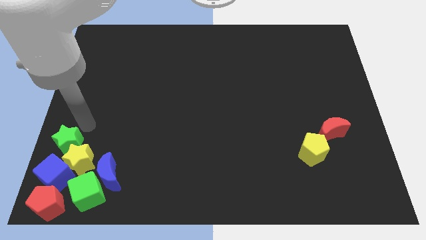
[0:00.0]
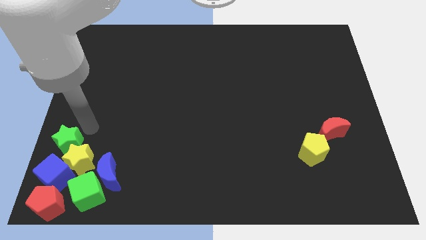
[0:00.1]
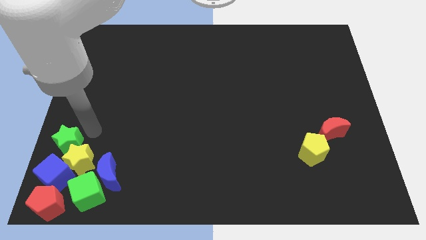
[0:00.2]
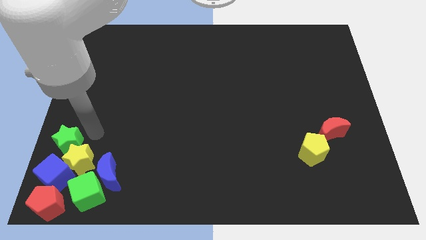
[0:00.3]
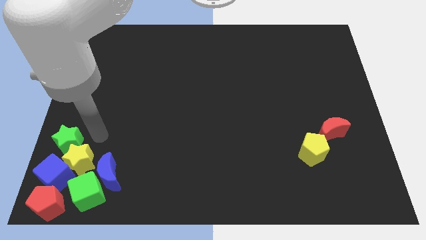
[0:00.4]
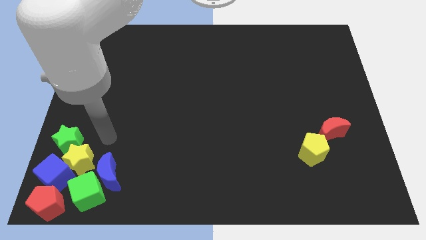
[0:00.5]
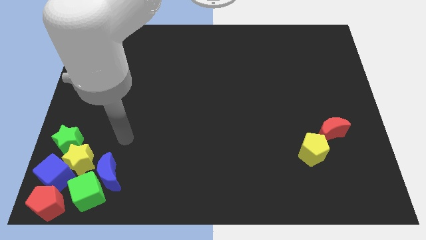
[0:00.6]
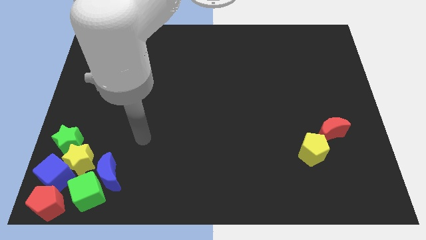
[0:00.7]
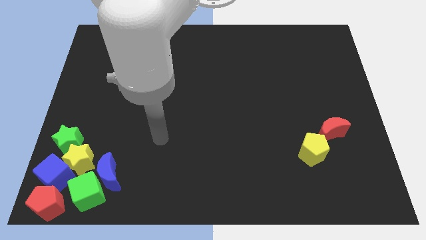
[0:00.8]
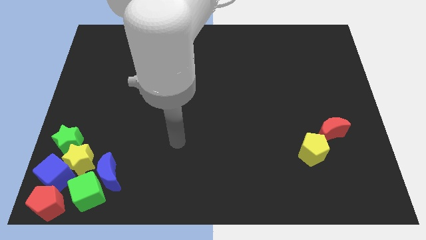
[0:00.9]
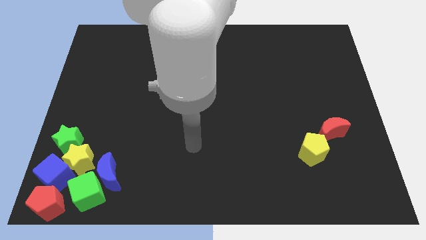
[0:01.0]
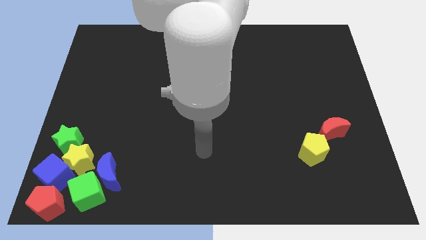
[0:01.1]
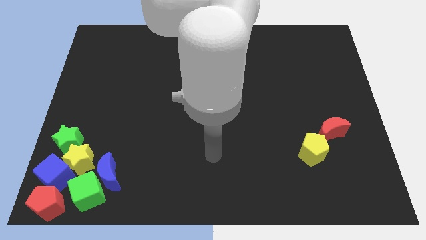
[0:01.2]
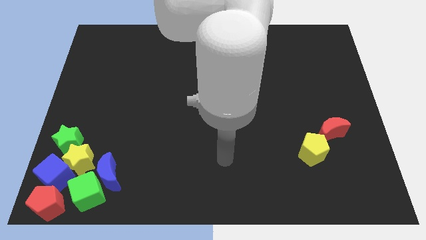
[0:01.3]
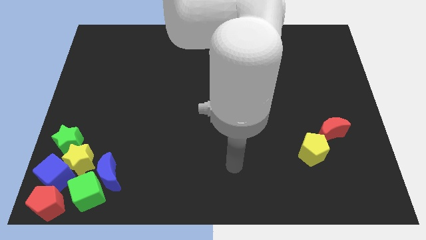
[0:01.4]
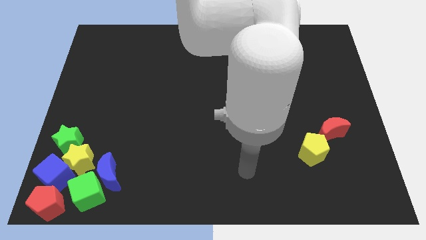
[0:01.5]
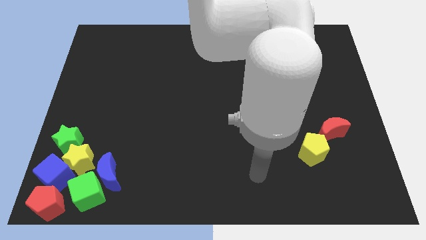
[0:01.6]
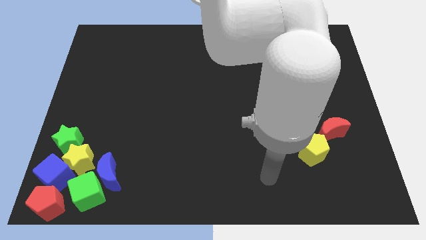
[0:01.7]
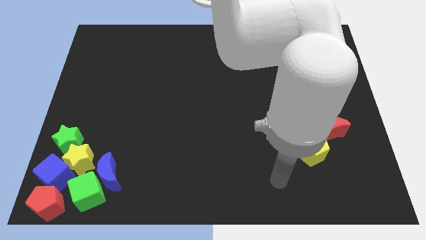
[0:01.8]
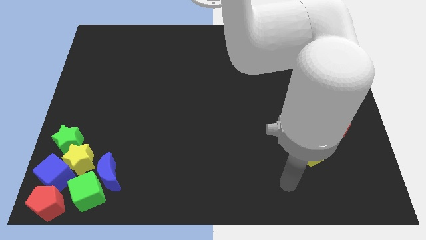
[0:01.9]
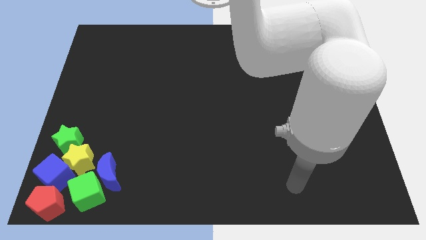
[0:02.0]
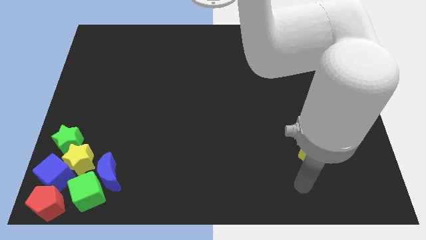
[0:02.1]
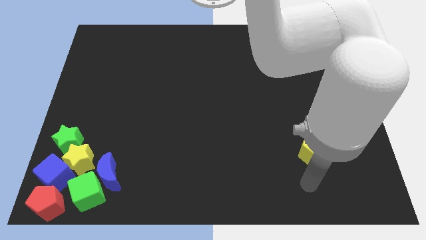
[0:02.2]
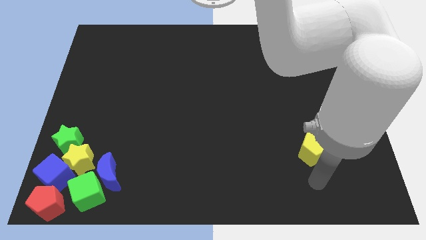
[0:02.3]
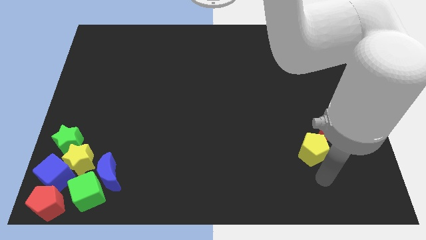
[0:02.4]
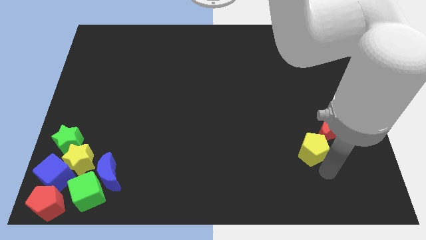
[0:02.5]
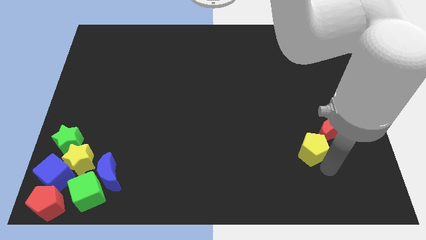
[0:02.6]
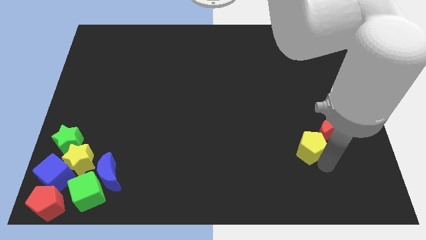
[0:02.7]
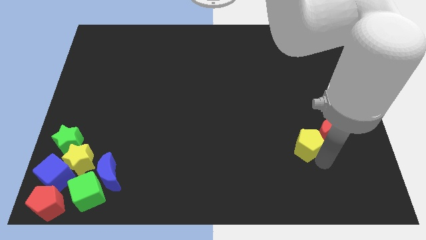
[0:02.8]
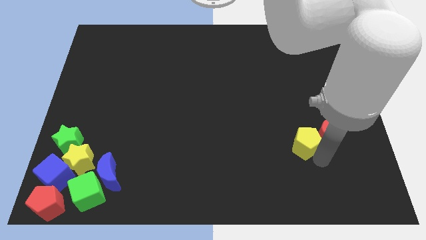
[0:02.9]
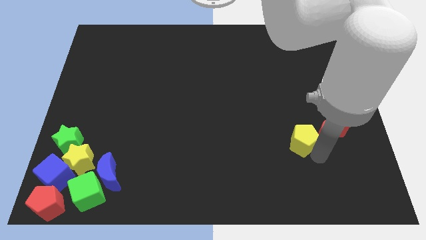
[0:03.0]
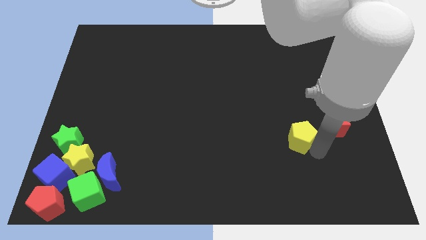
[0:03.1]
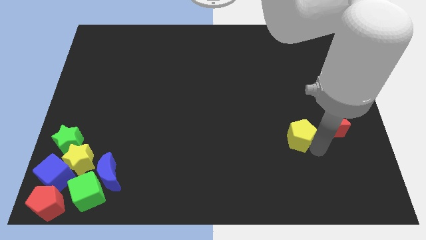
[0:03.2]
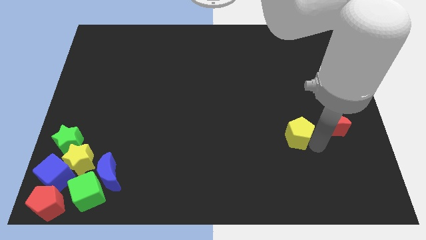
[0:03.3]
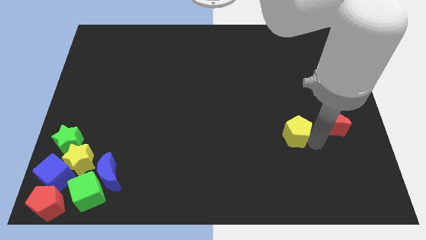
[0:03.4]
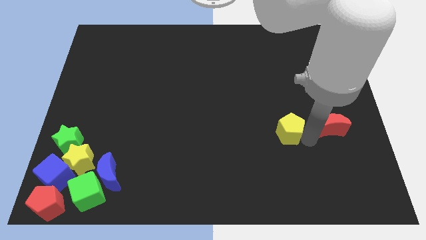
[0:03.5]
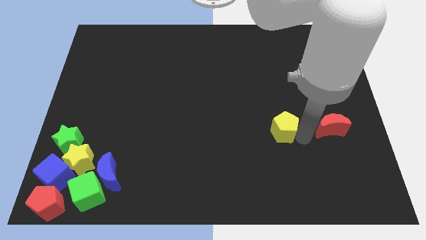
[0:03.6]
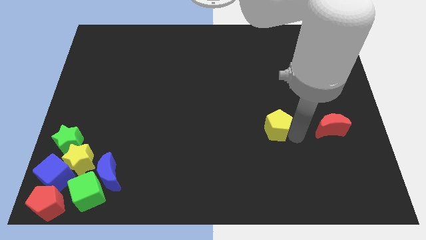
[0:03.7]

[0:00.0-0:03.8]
separate the yellow pentagon from the red crescent

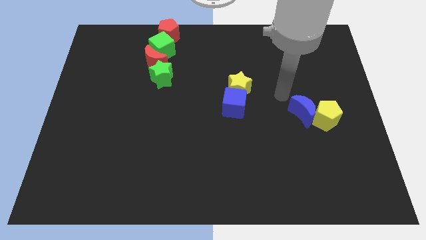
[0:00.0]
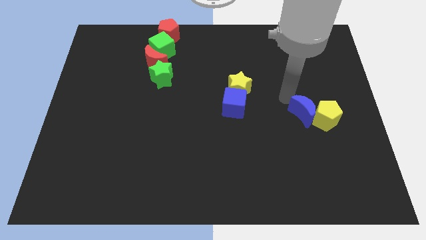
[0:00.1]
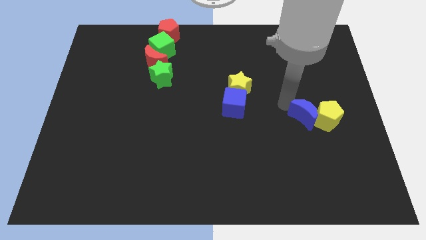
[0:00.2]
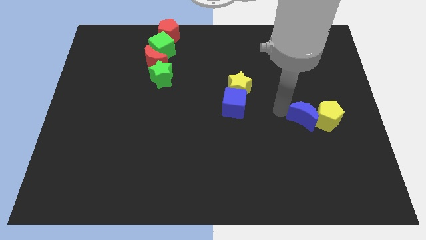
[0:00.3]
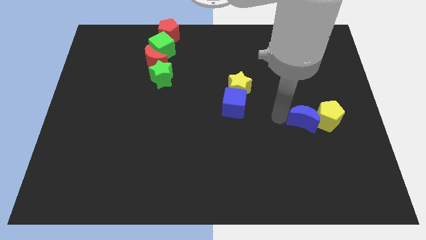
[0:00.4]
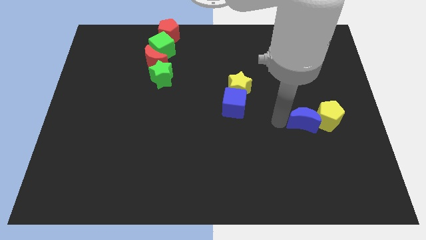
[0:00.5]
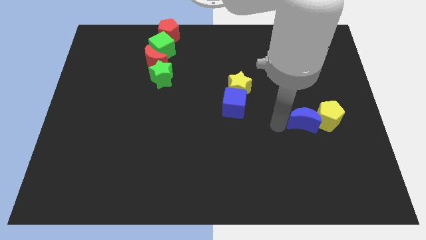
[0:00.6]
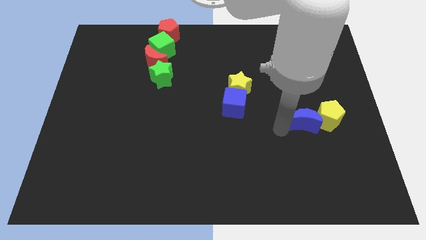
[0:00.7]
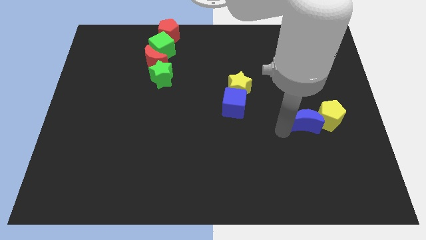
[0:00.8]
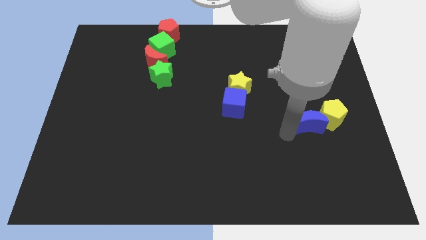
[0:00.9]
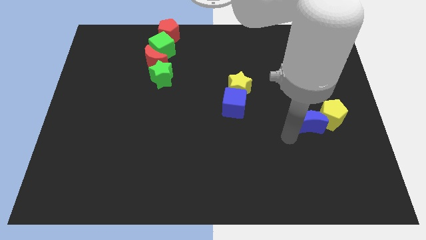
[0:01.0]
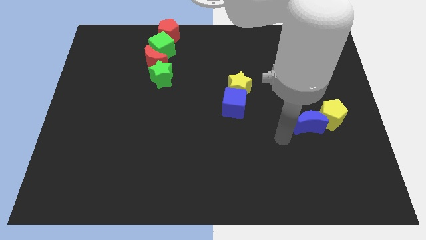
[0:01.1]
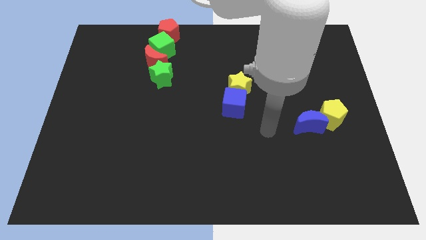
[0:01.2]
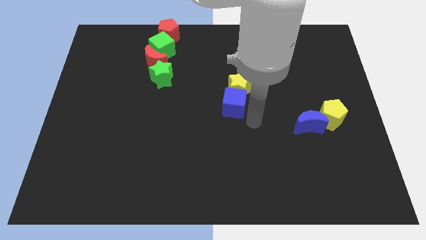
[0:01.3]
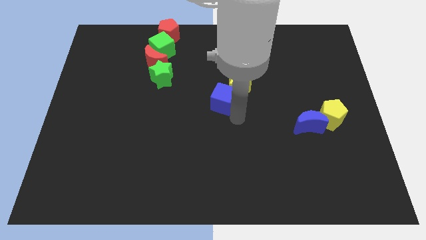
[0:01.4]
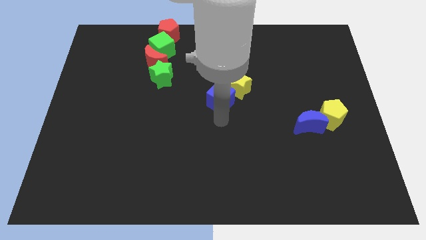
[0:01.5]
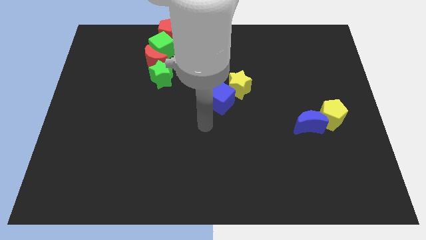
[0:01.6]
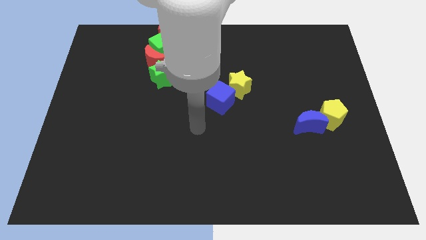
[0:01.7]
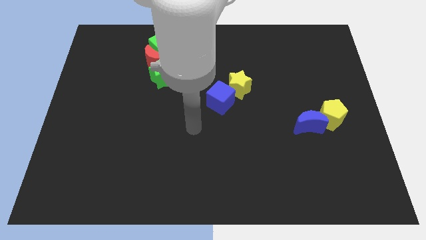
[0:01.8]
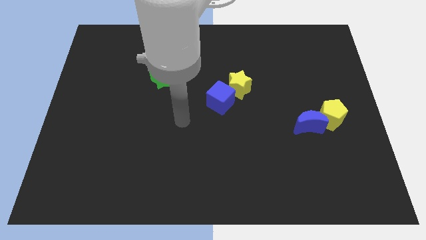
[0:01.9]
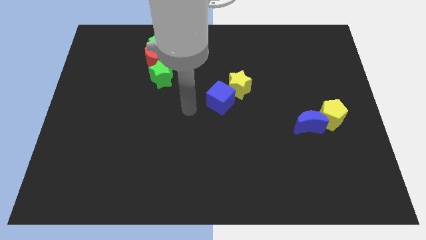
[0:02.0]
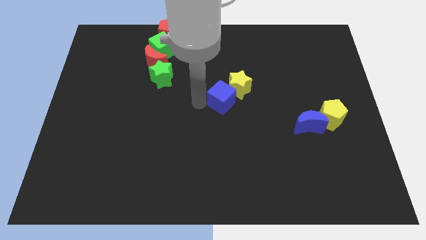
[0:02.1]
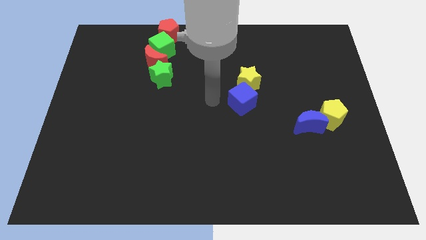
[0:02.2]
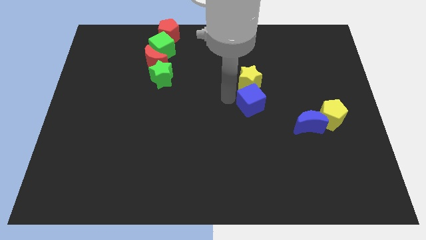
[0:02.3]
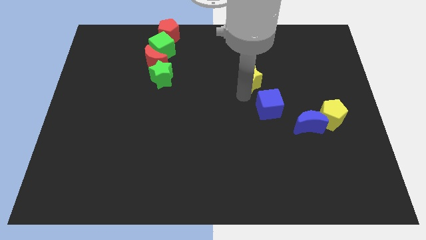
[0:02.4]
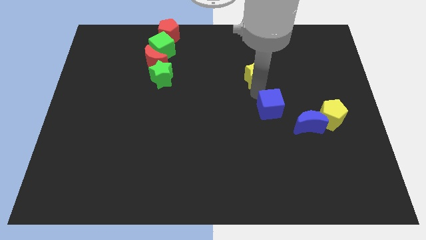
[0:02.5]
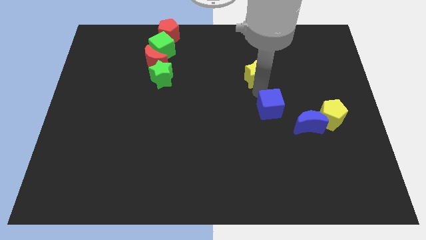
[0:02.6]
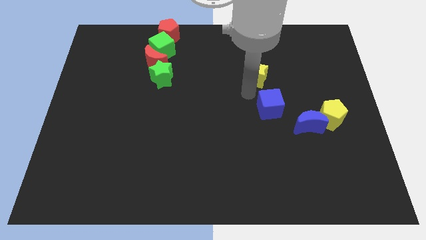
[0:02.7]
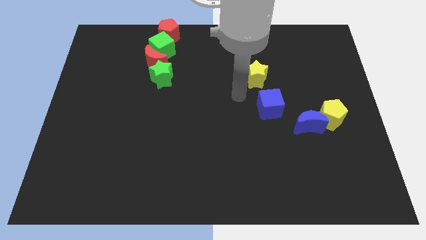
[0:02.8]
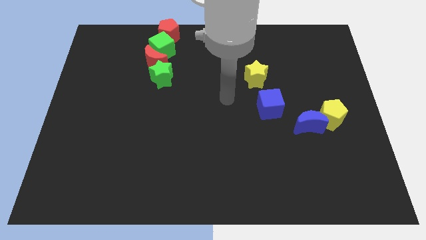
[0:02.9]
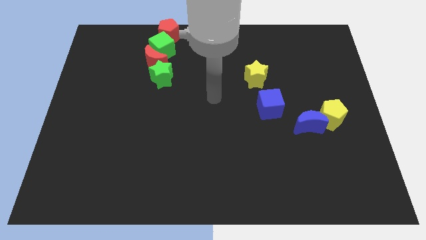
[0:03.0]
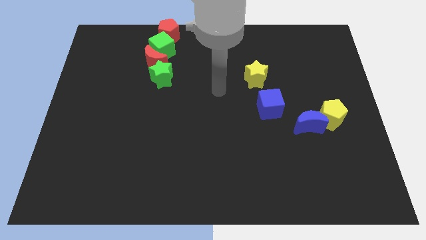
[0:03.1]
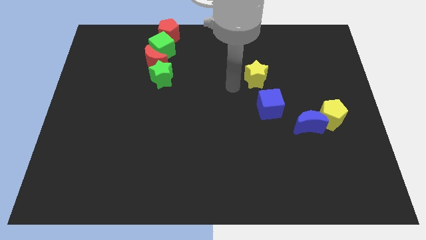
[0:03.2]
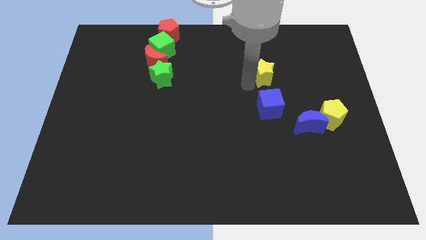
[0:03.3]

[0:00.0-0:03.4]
separate blue cube and yellow star

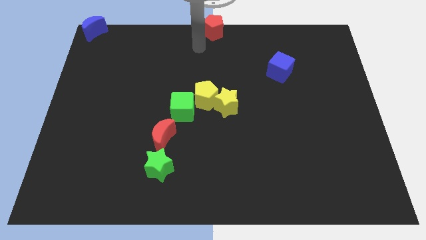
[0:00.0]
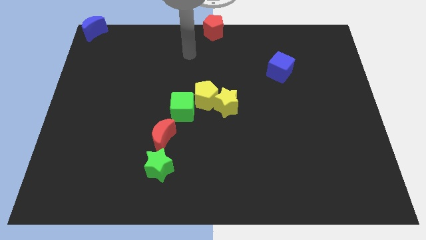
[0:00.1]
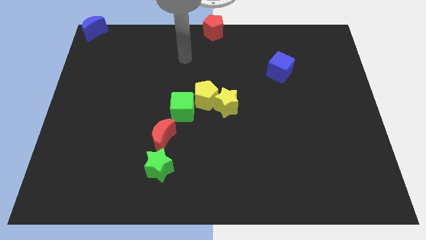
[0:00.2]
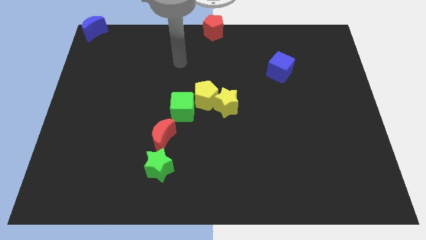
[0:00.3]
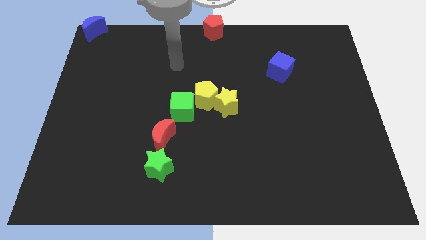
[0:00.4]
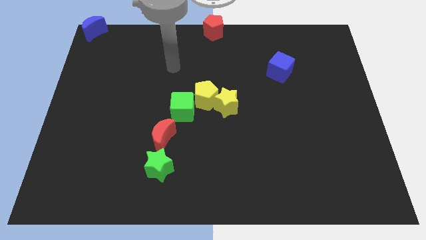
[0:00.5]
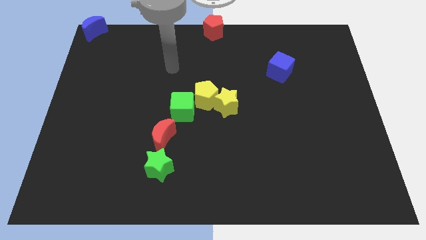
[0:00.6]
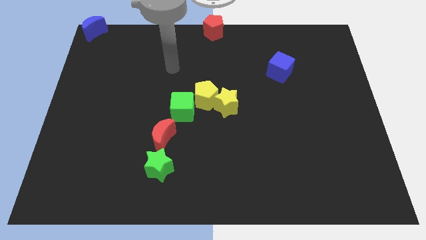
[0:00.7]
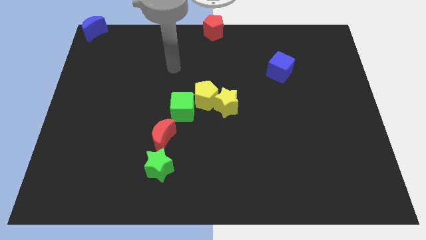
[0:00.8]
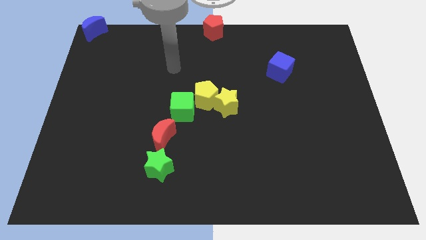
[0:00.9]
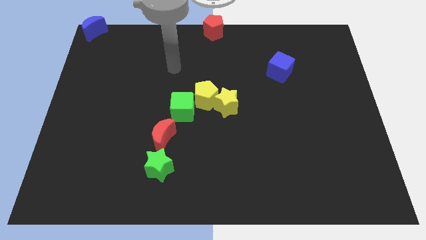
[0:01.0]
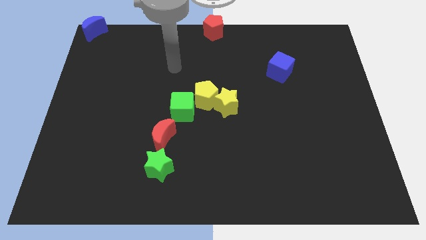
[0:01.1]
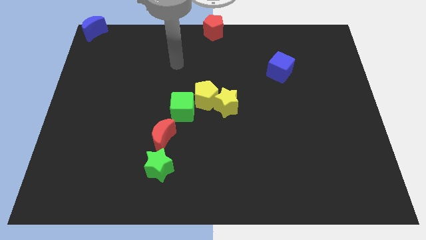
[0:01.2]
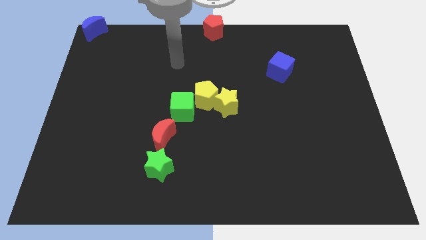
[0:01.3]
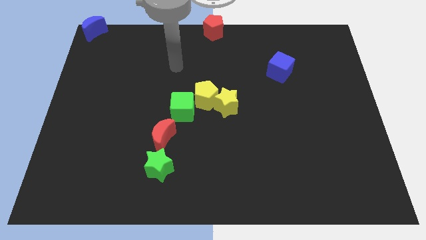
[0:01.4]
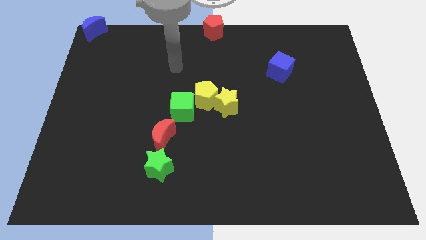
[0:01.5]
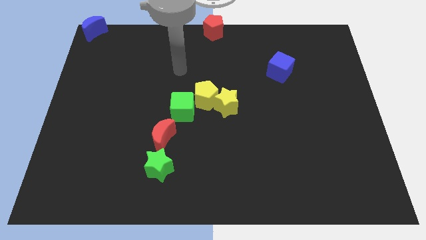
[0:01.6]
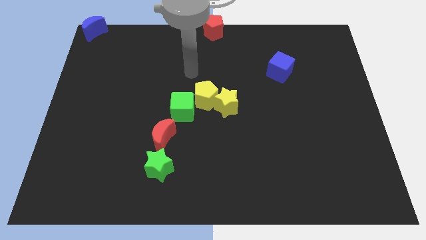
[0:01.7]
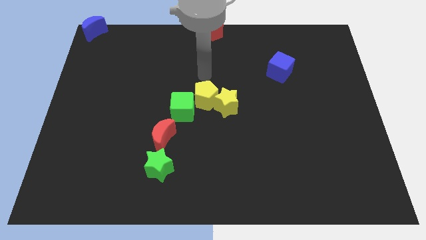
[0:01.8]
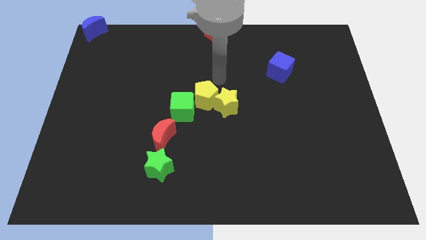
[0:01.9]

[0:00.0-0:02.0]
point your arm at the top of the yellow pentagon
